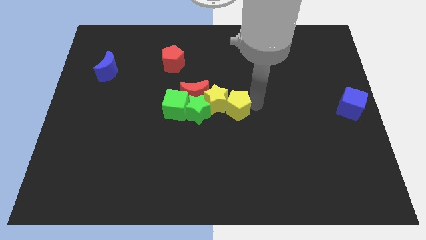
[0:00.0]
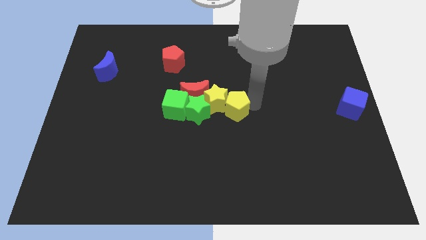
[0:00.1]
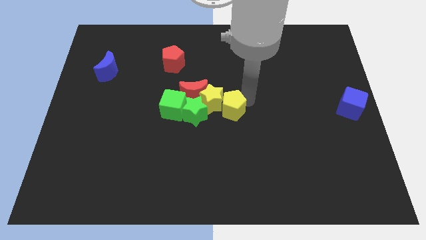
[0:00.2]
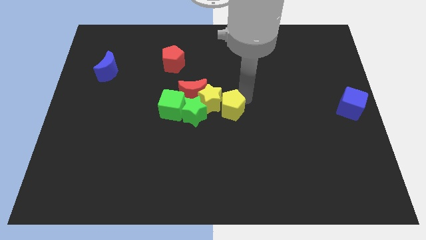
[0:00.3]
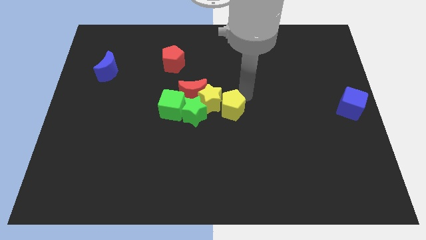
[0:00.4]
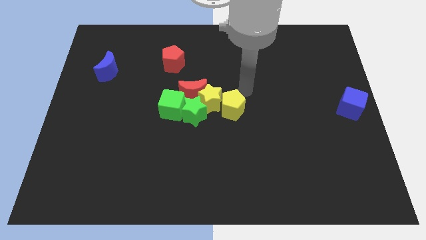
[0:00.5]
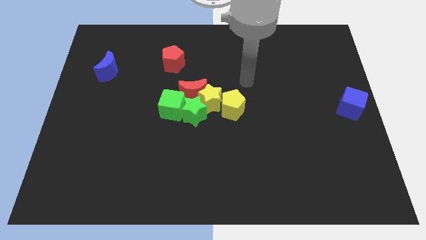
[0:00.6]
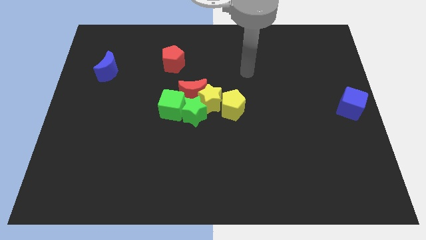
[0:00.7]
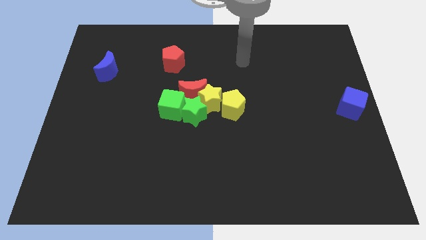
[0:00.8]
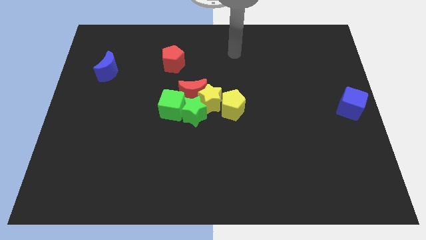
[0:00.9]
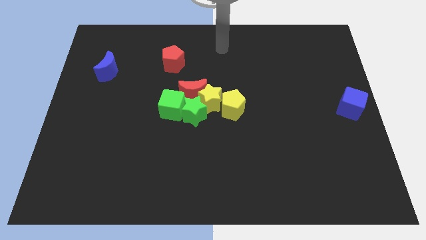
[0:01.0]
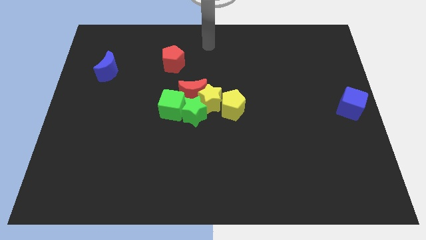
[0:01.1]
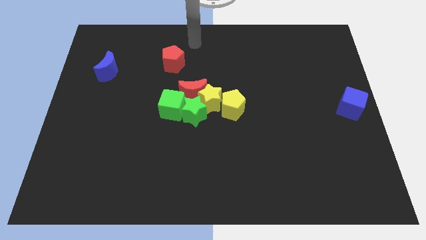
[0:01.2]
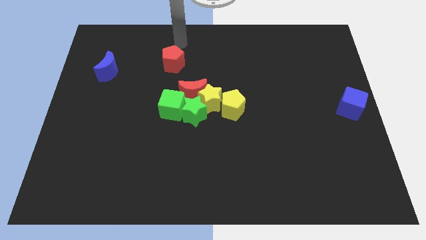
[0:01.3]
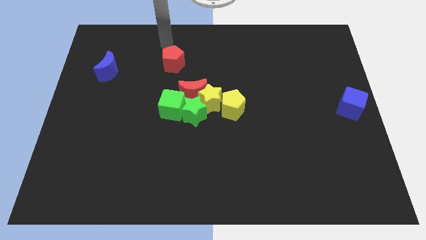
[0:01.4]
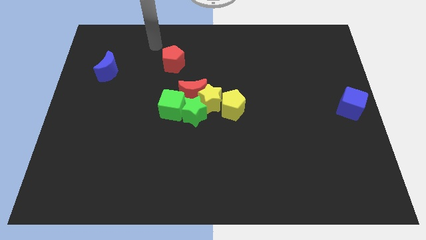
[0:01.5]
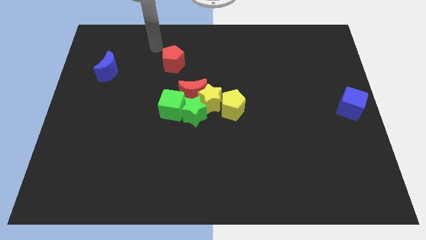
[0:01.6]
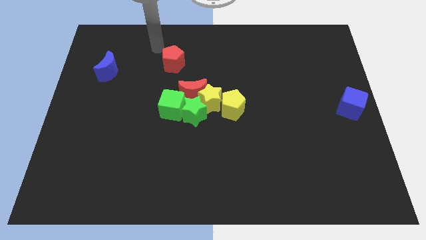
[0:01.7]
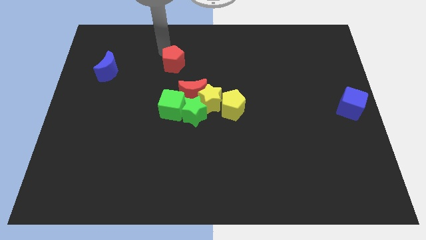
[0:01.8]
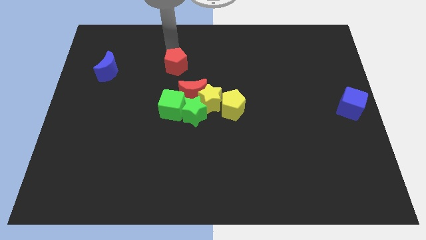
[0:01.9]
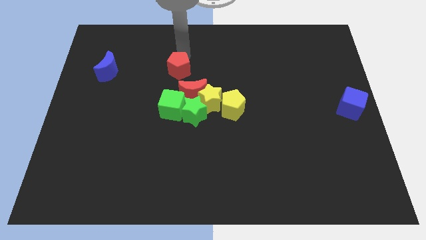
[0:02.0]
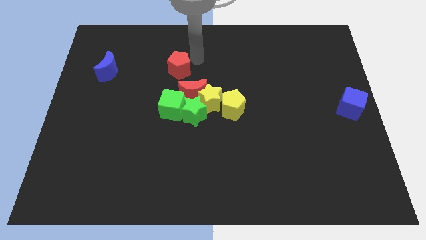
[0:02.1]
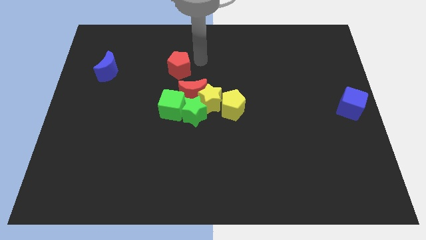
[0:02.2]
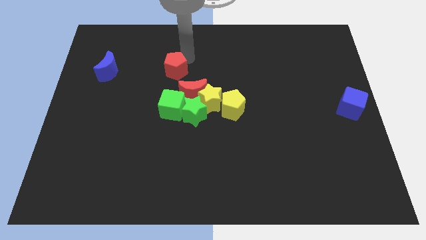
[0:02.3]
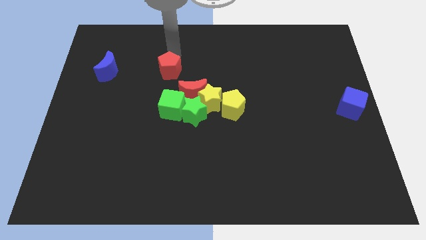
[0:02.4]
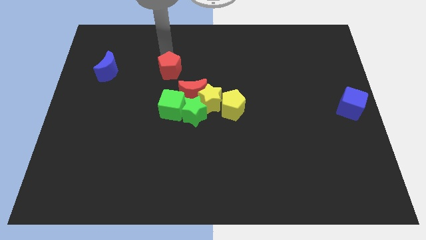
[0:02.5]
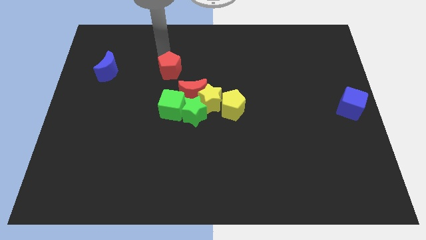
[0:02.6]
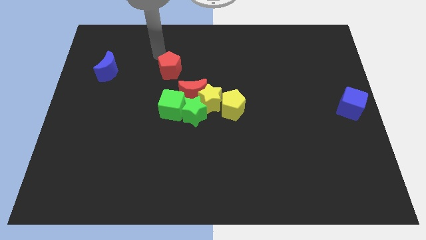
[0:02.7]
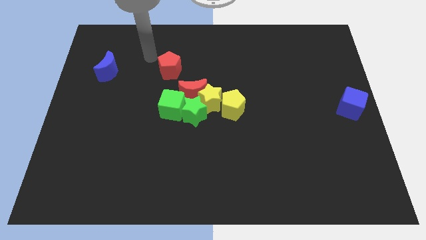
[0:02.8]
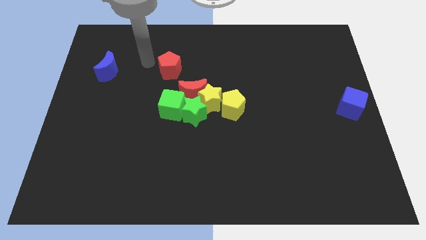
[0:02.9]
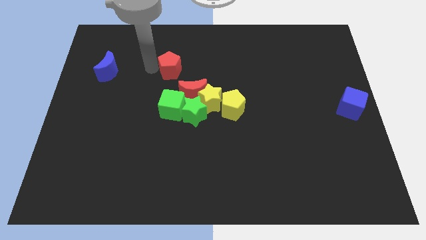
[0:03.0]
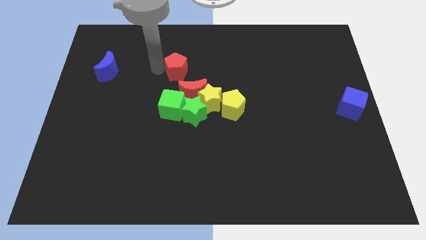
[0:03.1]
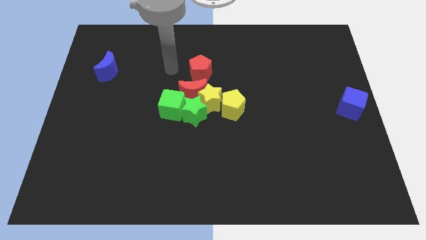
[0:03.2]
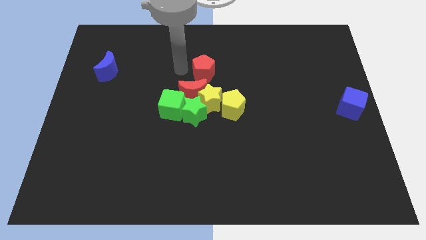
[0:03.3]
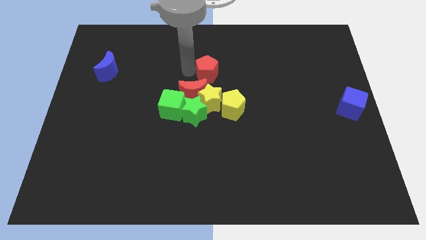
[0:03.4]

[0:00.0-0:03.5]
drag red pentagon above red moon

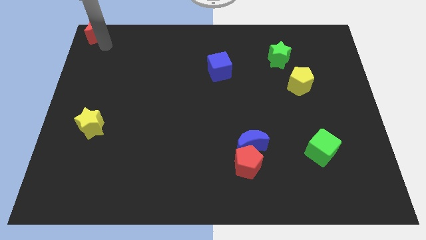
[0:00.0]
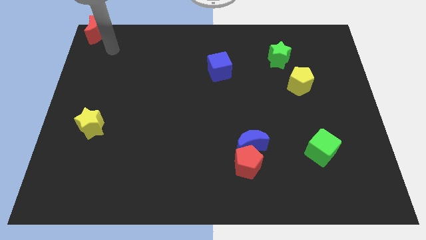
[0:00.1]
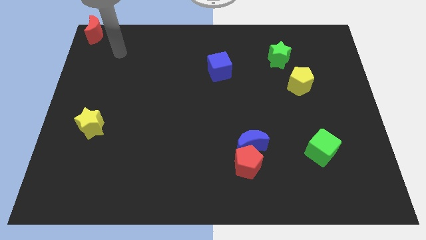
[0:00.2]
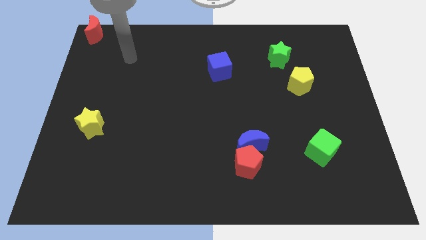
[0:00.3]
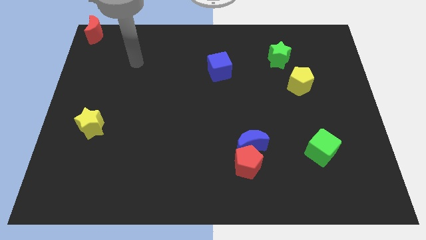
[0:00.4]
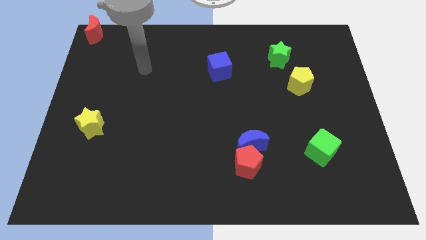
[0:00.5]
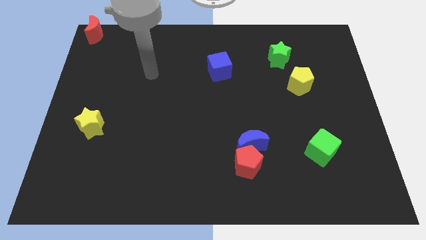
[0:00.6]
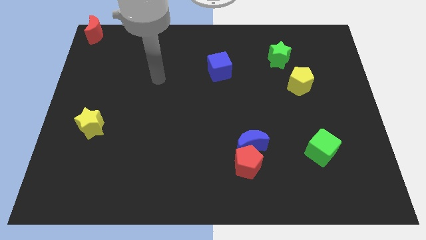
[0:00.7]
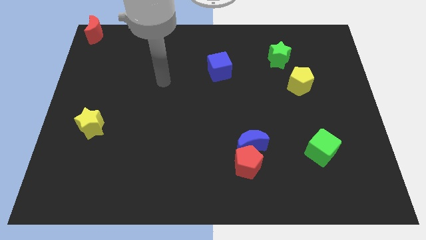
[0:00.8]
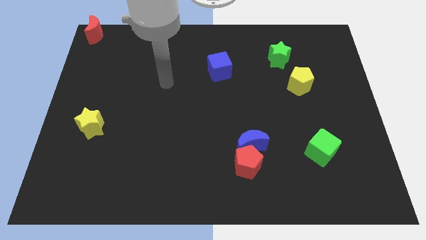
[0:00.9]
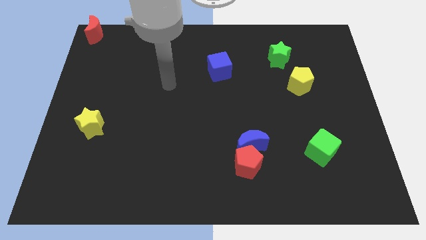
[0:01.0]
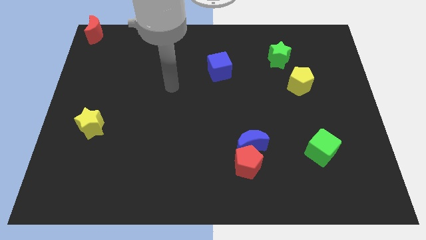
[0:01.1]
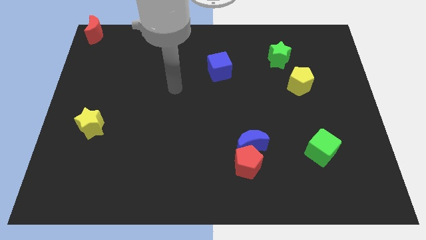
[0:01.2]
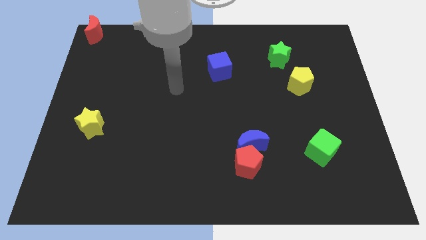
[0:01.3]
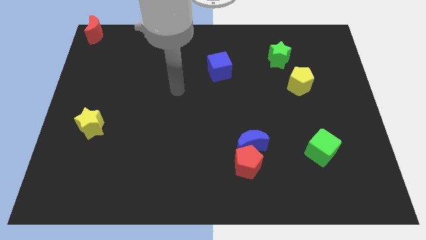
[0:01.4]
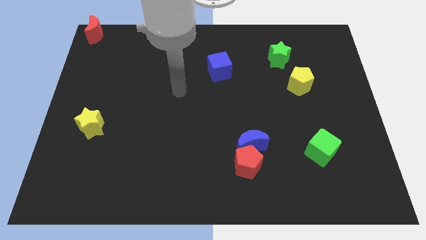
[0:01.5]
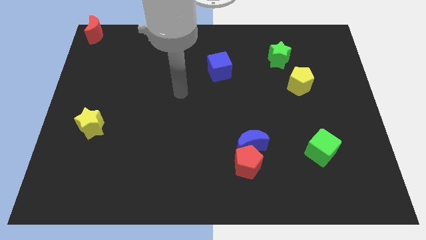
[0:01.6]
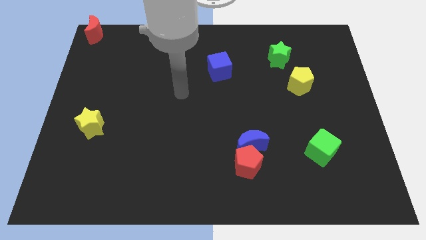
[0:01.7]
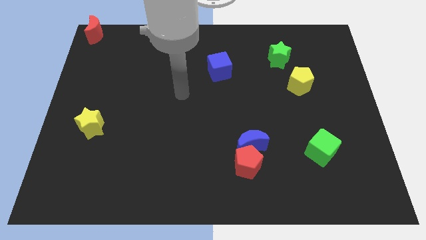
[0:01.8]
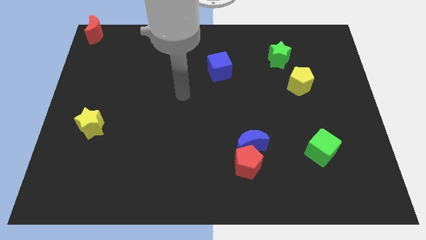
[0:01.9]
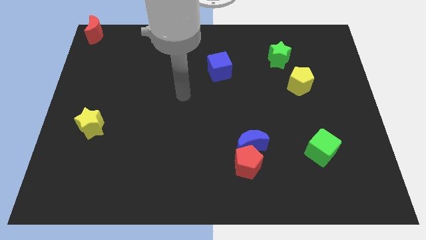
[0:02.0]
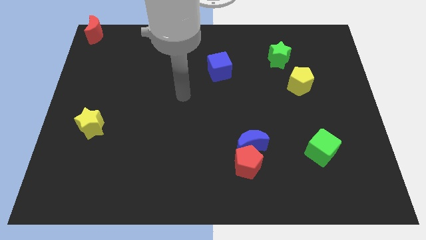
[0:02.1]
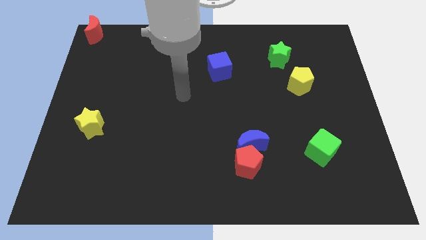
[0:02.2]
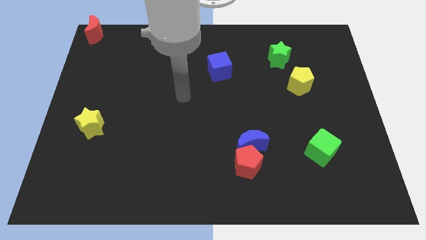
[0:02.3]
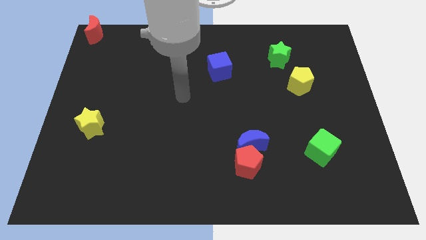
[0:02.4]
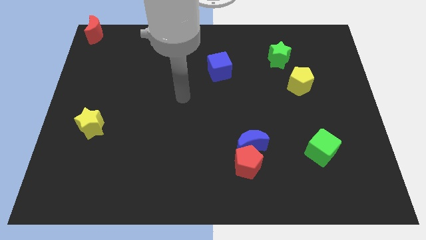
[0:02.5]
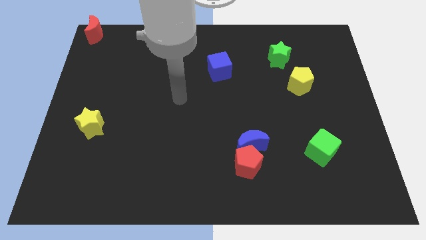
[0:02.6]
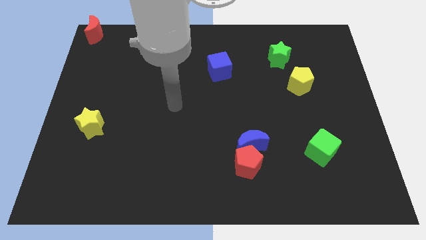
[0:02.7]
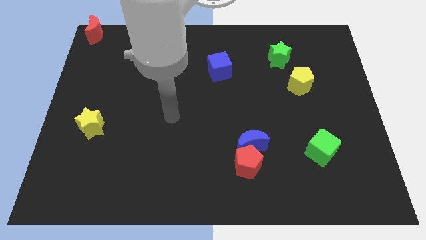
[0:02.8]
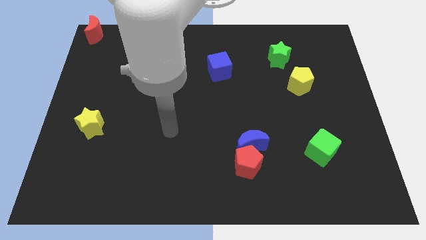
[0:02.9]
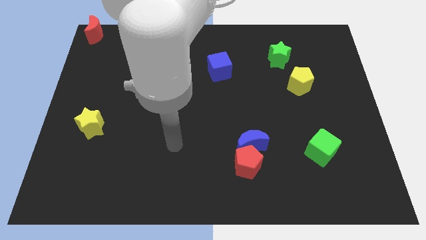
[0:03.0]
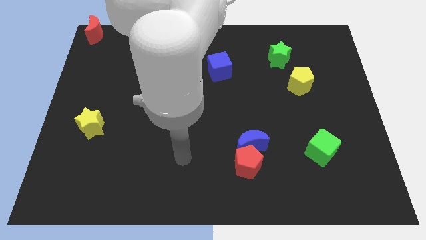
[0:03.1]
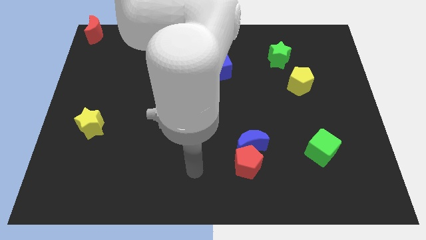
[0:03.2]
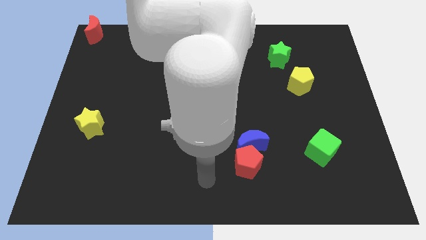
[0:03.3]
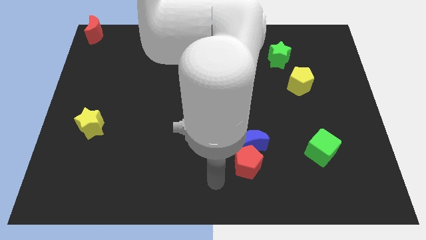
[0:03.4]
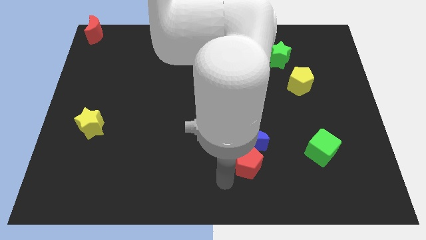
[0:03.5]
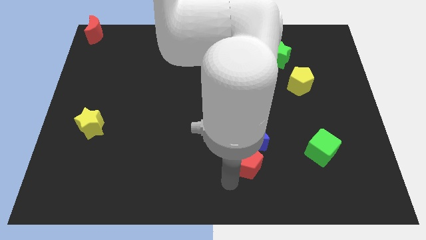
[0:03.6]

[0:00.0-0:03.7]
move the arm towards the red pentagon

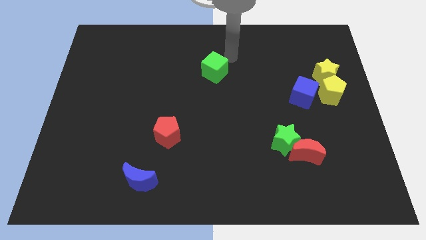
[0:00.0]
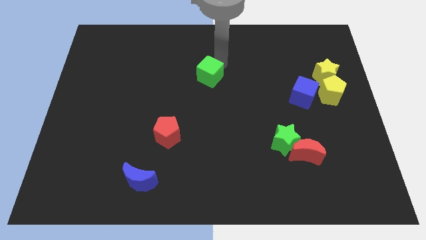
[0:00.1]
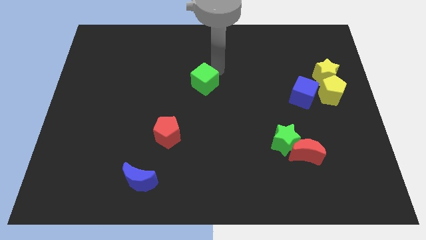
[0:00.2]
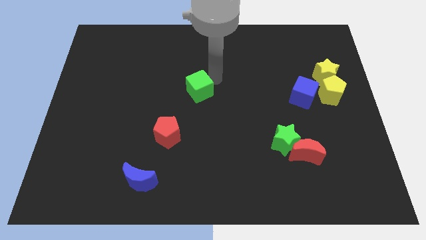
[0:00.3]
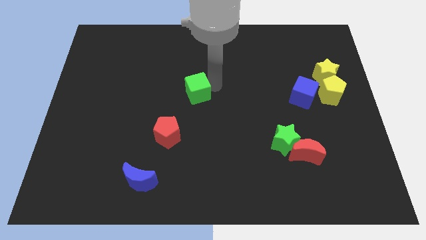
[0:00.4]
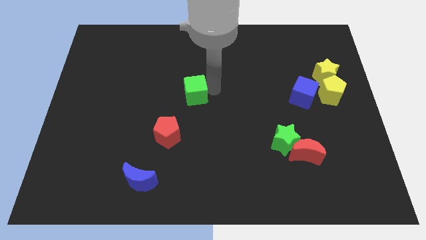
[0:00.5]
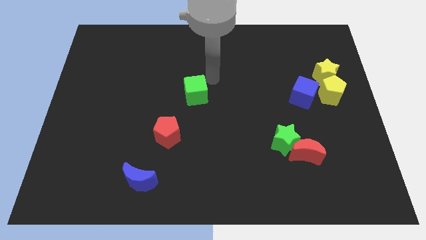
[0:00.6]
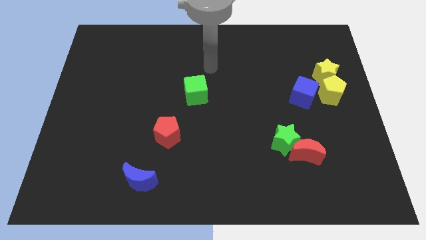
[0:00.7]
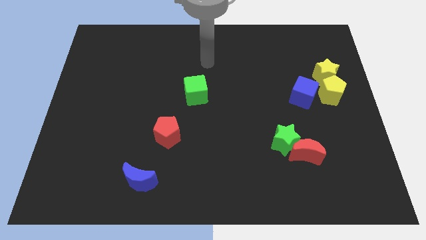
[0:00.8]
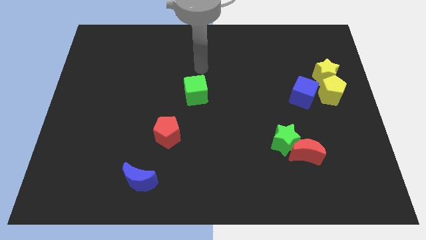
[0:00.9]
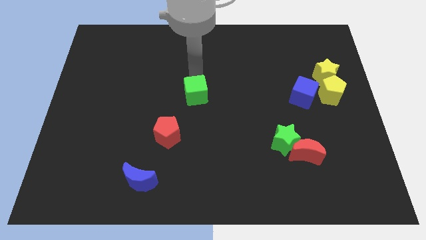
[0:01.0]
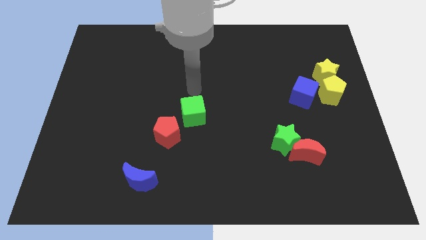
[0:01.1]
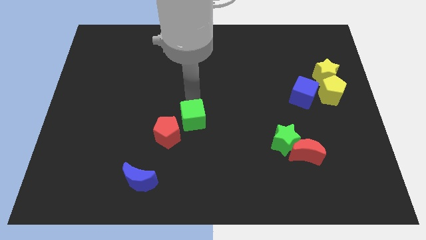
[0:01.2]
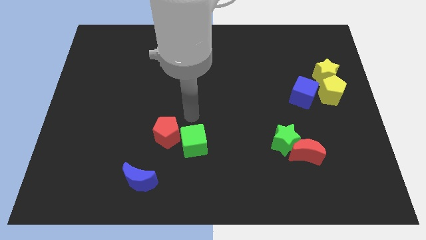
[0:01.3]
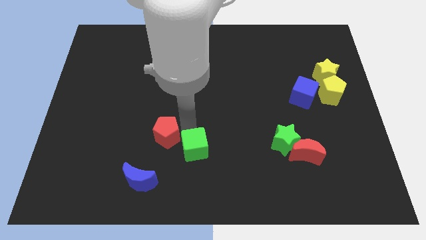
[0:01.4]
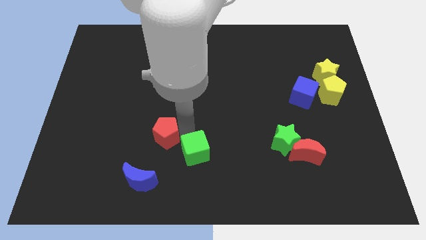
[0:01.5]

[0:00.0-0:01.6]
drag the green cube slightly downwards

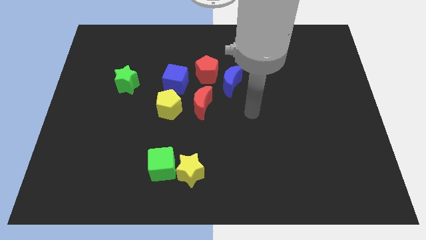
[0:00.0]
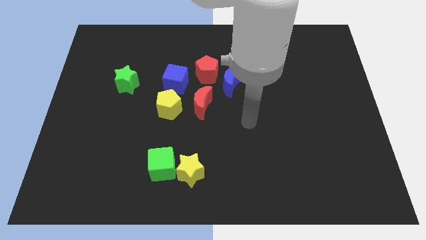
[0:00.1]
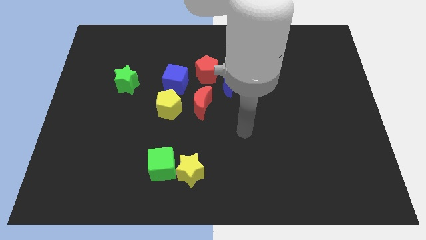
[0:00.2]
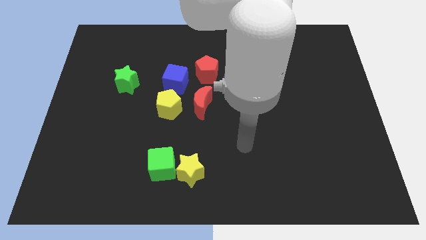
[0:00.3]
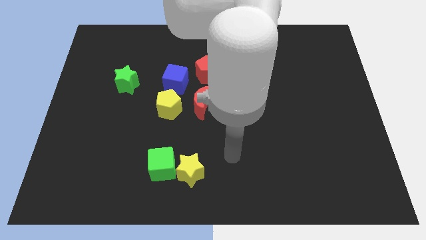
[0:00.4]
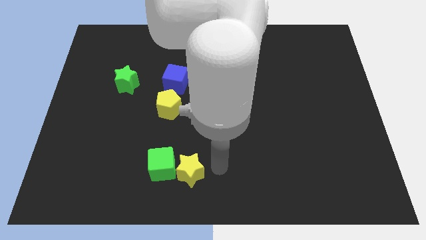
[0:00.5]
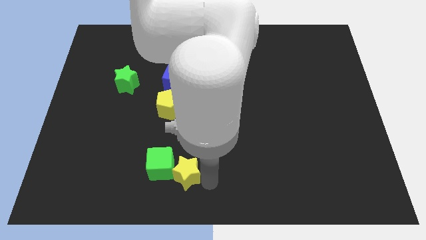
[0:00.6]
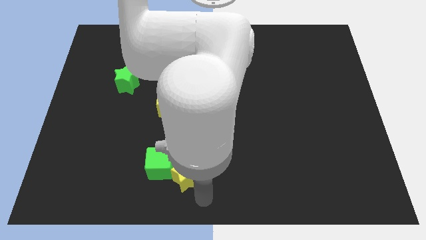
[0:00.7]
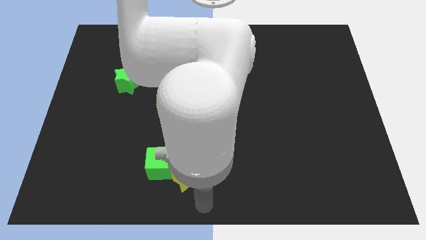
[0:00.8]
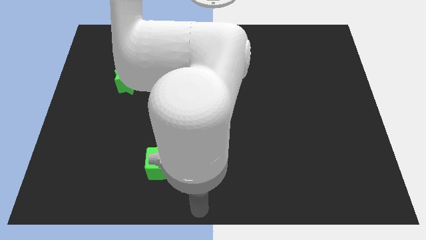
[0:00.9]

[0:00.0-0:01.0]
push the arm to the right of the yellow star
